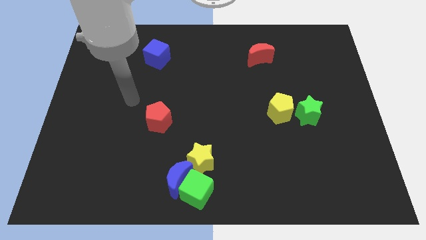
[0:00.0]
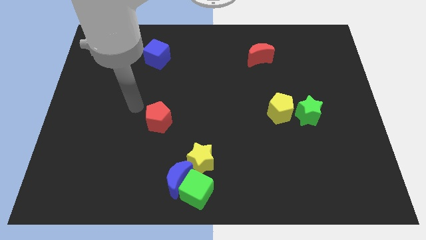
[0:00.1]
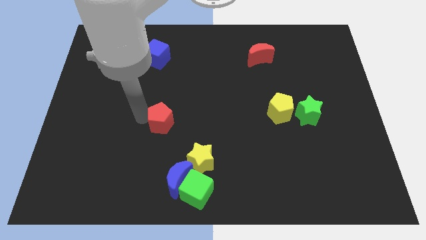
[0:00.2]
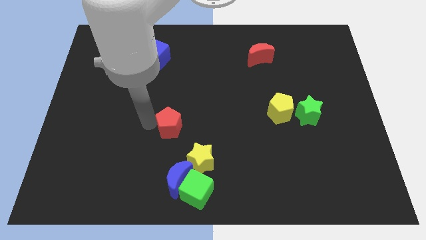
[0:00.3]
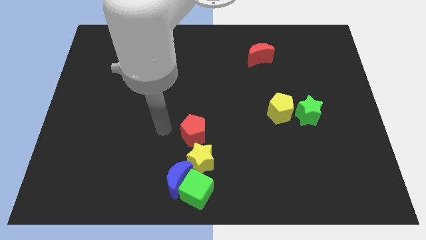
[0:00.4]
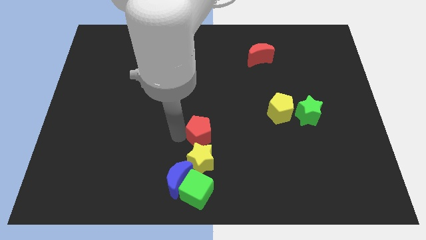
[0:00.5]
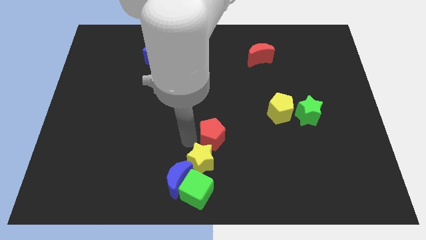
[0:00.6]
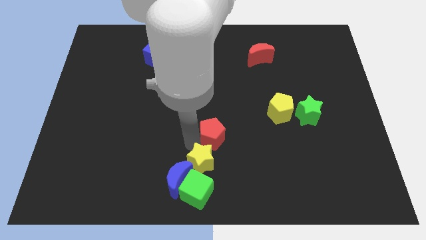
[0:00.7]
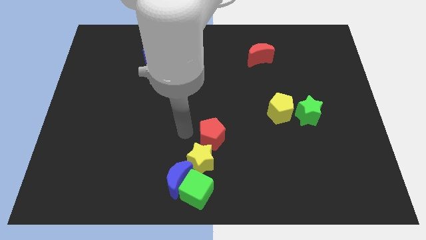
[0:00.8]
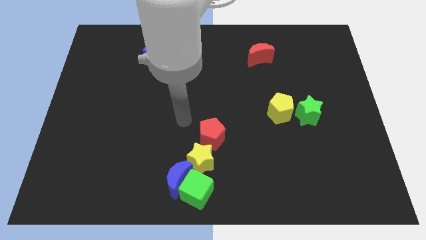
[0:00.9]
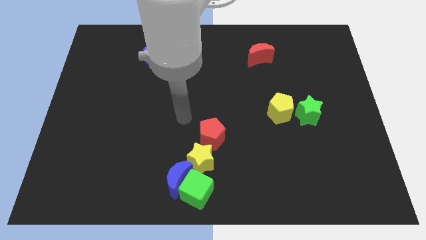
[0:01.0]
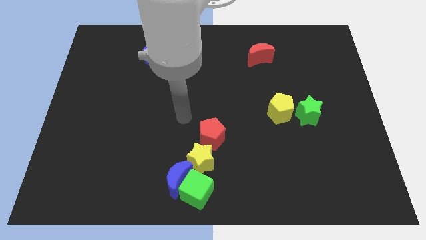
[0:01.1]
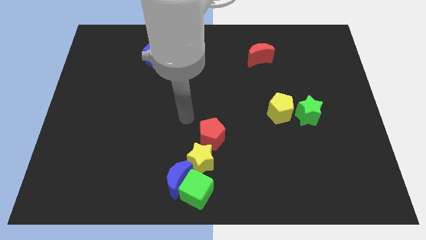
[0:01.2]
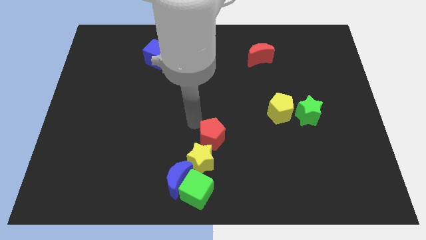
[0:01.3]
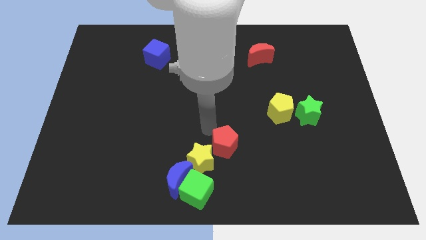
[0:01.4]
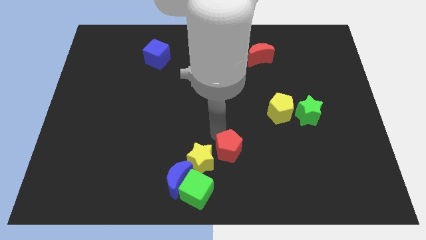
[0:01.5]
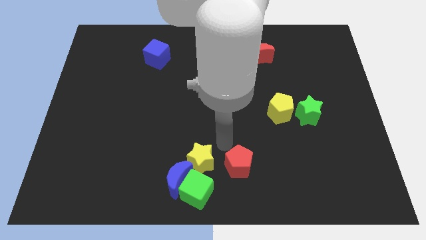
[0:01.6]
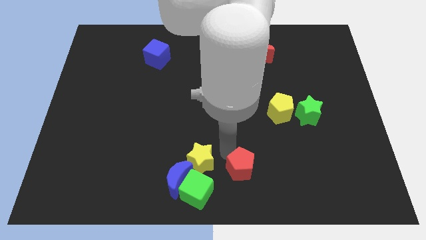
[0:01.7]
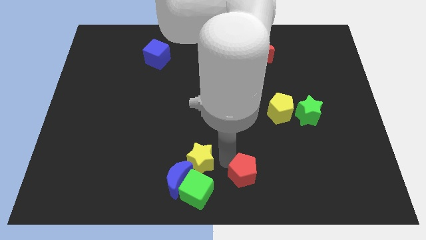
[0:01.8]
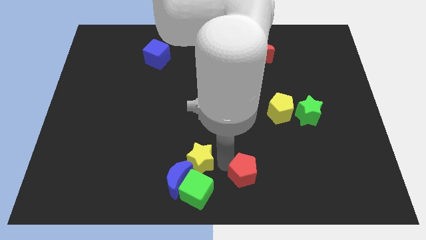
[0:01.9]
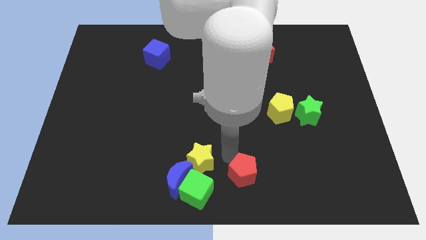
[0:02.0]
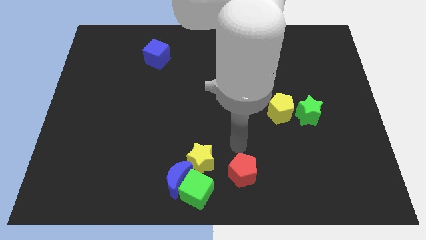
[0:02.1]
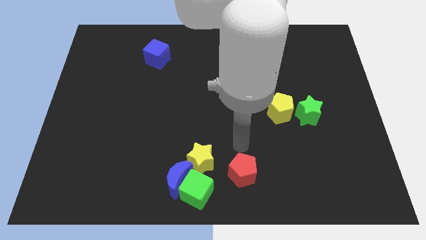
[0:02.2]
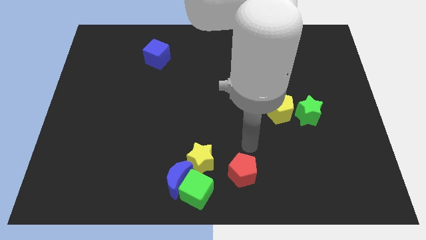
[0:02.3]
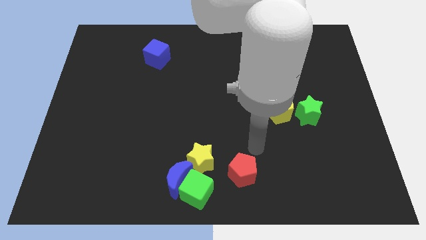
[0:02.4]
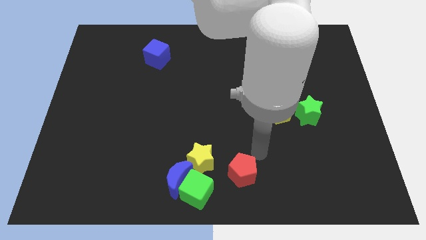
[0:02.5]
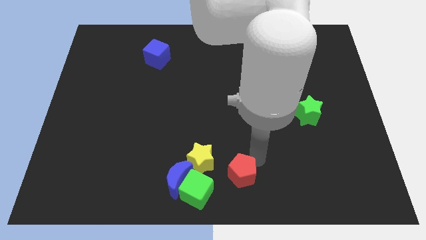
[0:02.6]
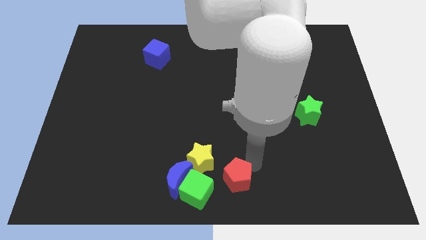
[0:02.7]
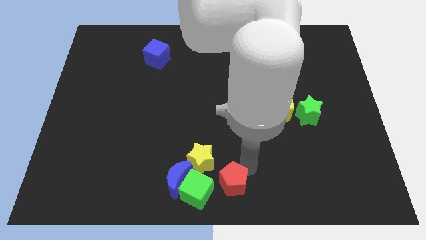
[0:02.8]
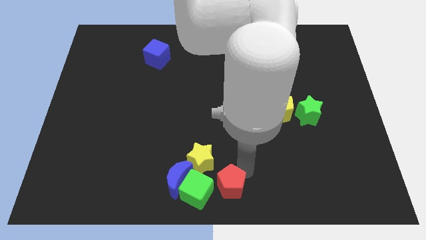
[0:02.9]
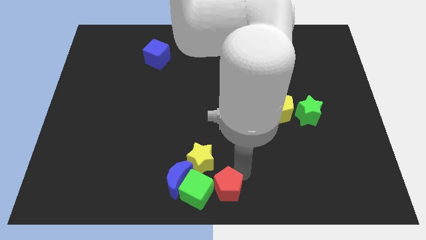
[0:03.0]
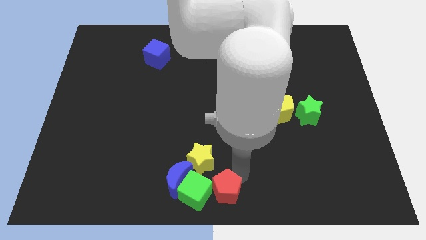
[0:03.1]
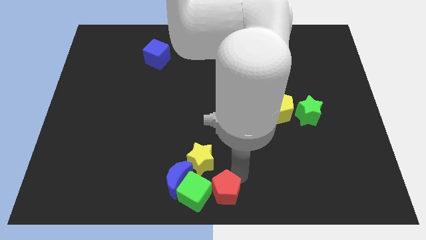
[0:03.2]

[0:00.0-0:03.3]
move the red pentagon into the green cube

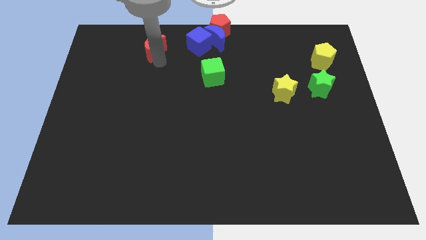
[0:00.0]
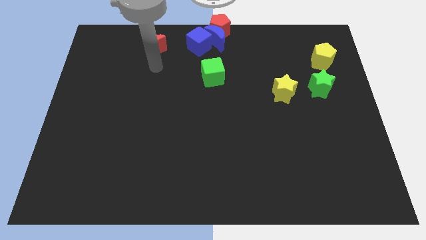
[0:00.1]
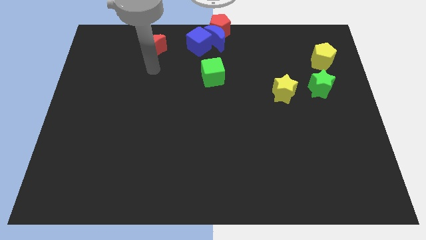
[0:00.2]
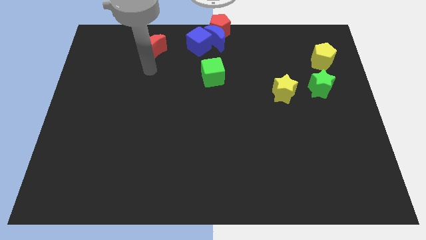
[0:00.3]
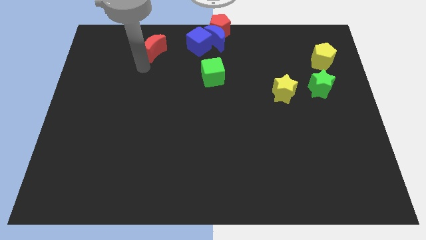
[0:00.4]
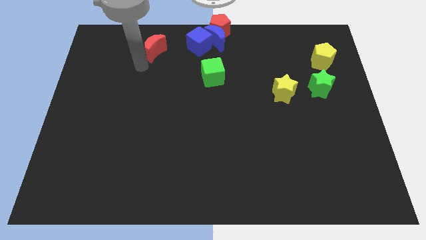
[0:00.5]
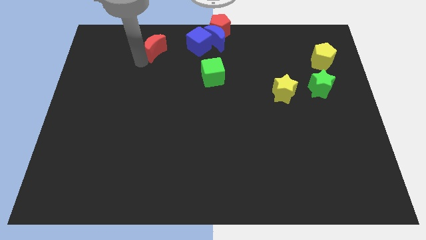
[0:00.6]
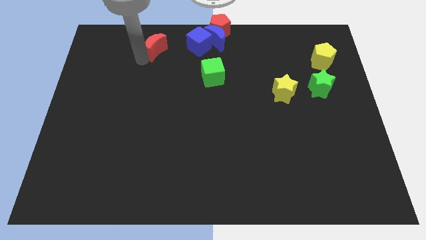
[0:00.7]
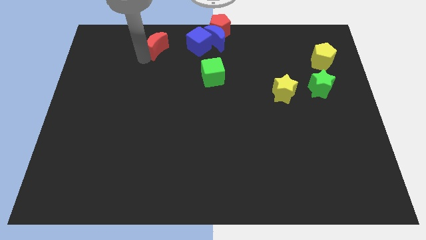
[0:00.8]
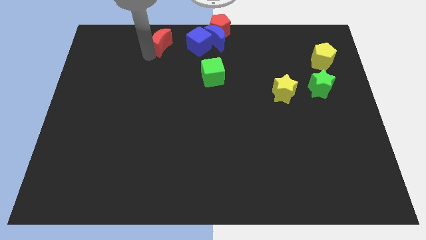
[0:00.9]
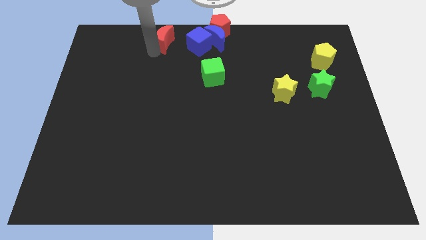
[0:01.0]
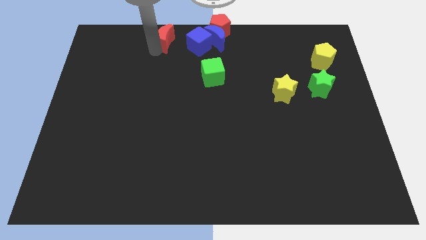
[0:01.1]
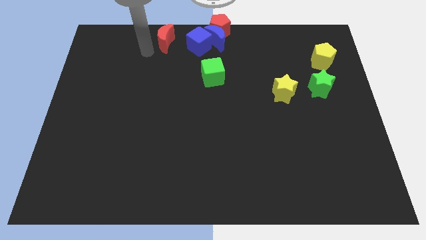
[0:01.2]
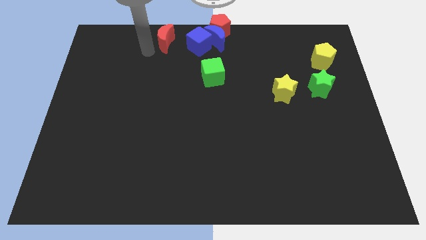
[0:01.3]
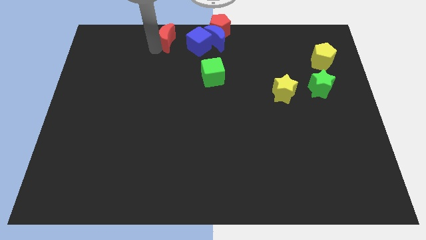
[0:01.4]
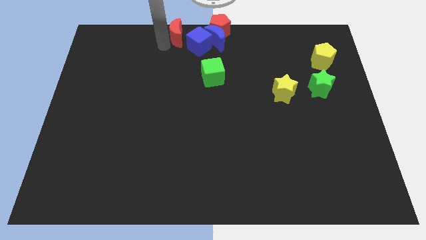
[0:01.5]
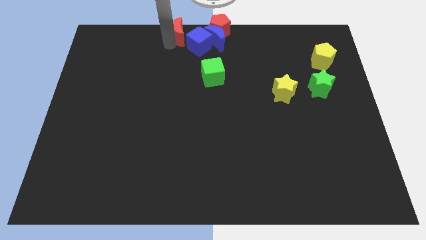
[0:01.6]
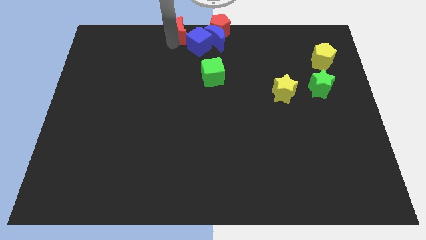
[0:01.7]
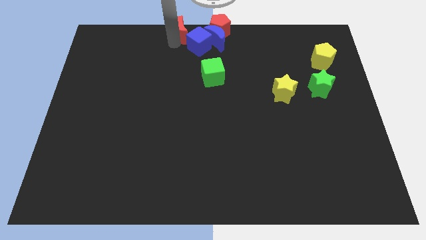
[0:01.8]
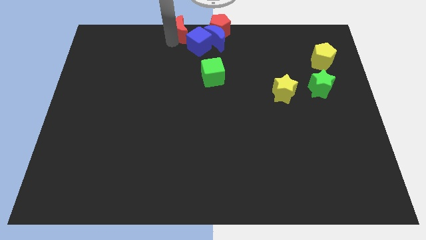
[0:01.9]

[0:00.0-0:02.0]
add the red crescent into the blue cube

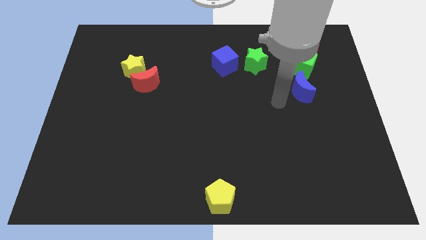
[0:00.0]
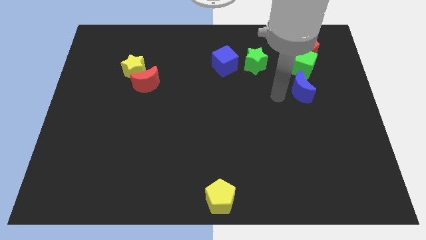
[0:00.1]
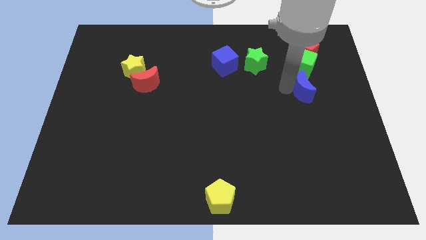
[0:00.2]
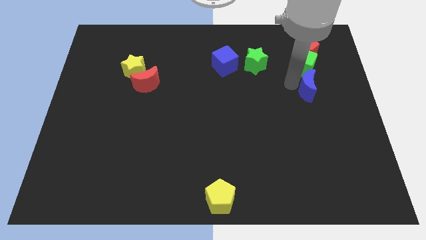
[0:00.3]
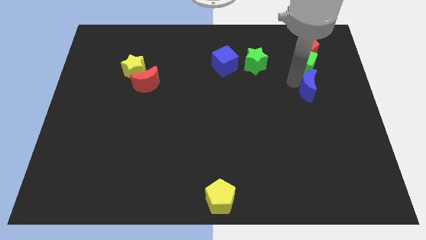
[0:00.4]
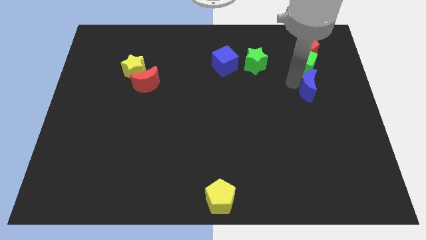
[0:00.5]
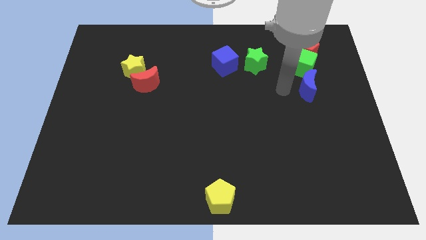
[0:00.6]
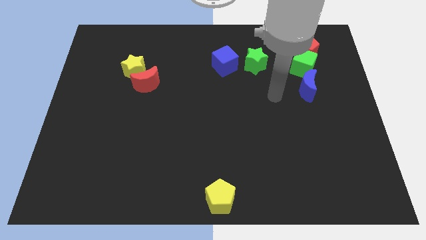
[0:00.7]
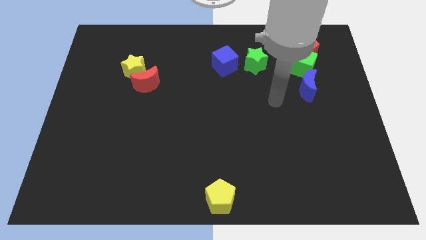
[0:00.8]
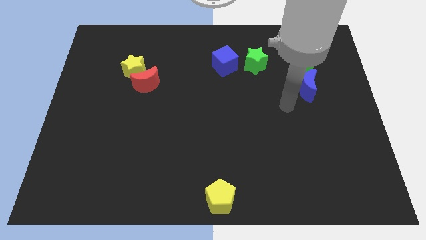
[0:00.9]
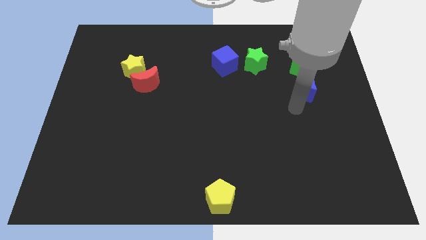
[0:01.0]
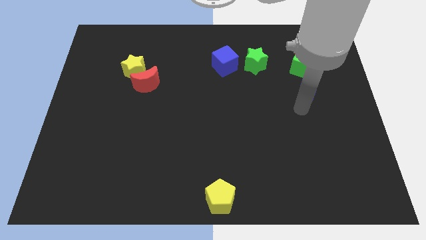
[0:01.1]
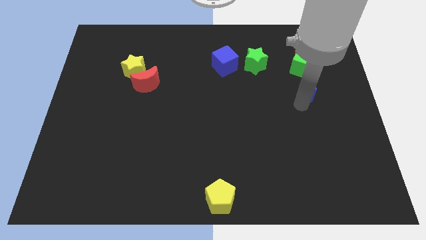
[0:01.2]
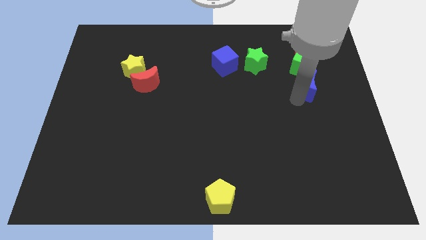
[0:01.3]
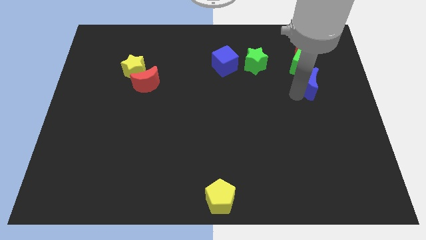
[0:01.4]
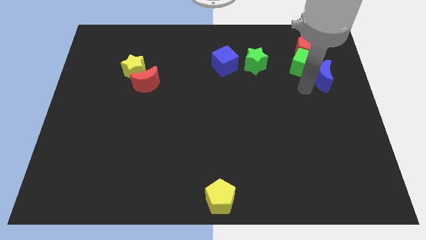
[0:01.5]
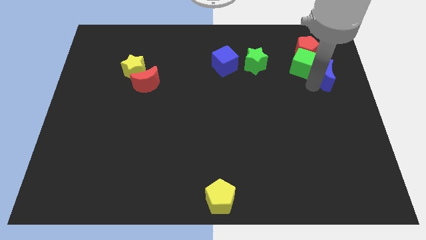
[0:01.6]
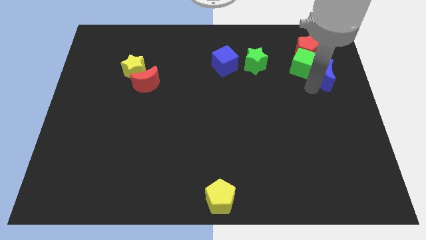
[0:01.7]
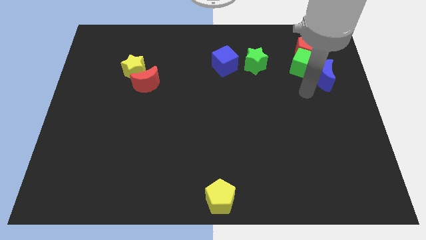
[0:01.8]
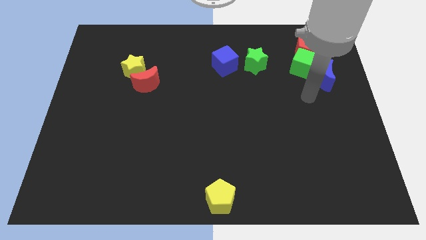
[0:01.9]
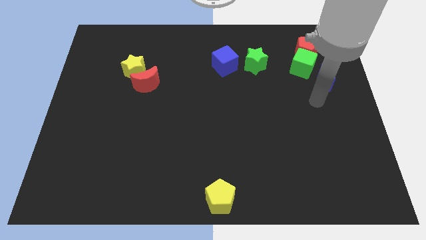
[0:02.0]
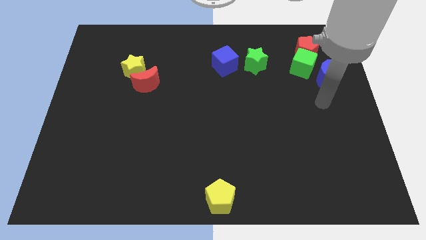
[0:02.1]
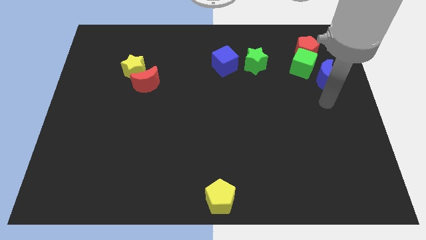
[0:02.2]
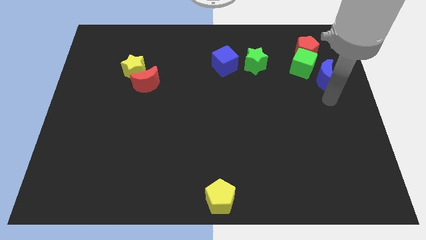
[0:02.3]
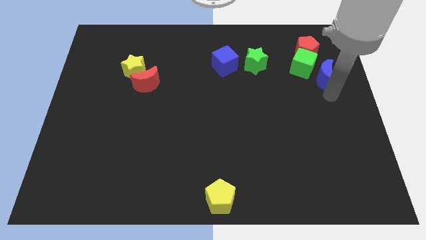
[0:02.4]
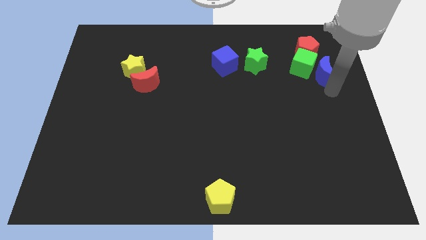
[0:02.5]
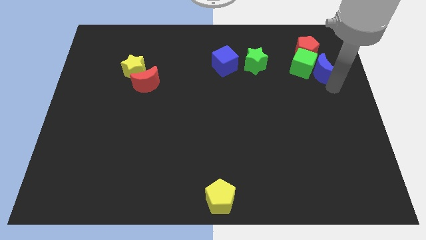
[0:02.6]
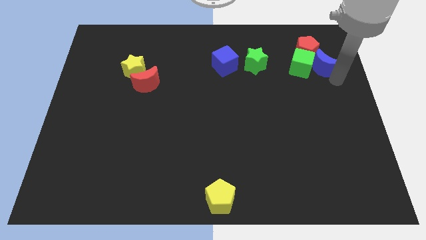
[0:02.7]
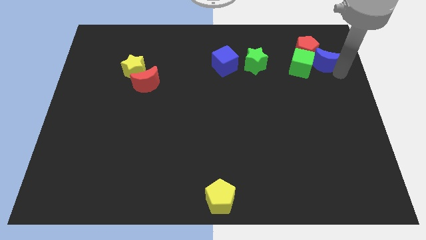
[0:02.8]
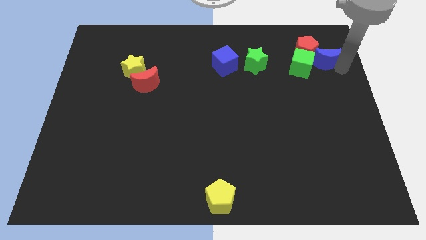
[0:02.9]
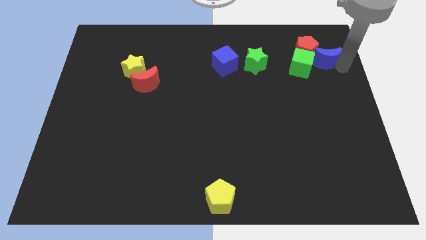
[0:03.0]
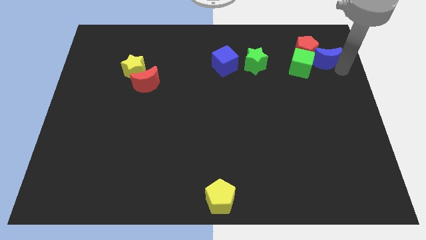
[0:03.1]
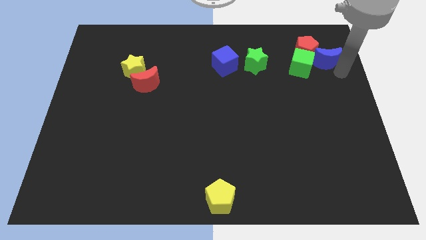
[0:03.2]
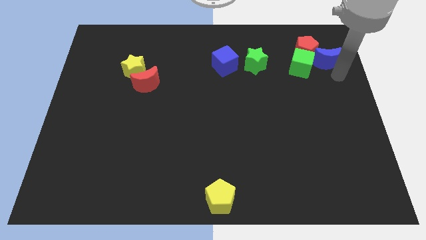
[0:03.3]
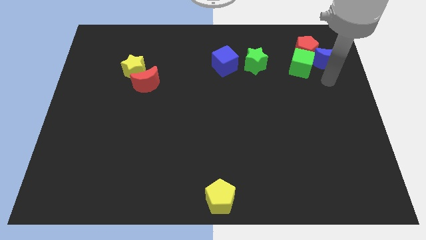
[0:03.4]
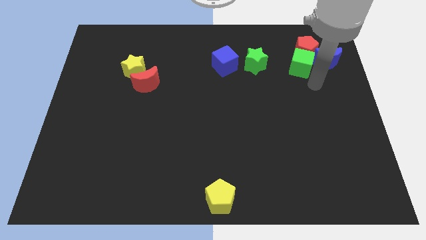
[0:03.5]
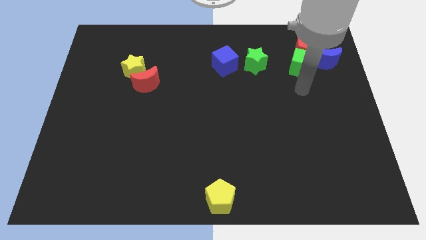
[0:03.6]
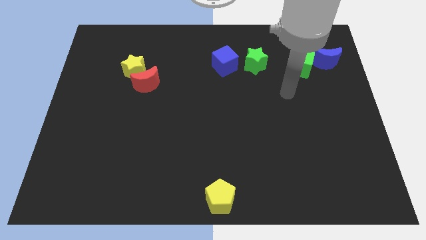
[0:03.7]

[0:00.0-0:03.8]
make a group of green cubered pentagon and blue moon
